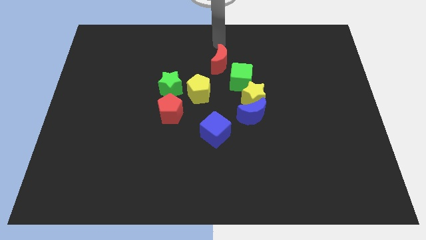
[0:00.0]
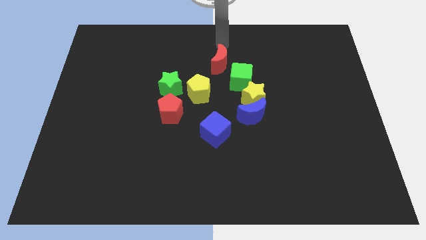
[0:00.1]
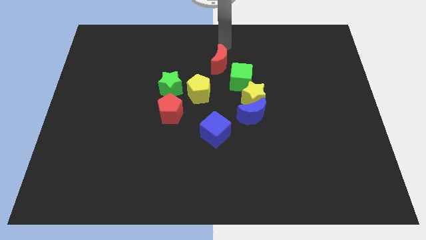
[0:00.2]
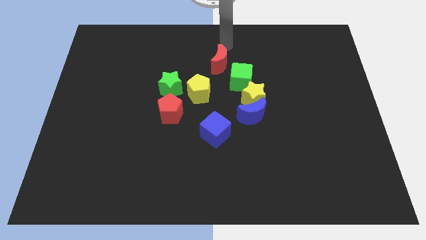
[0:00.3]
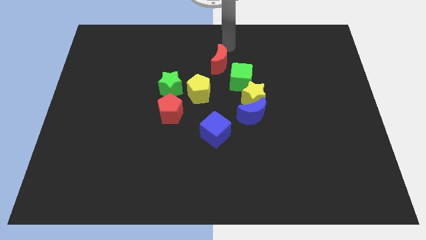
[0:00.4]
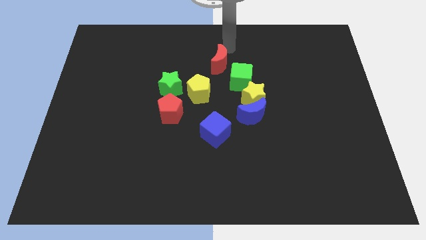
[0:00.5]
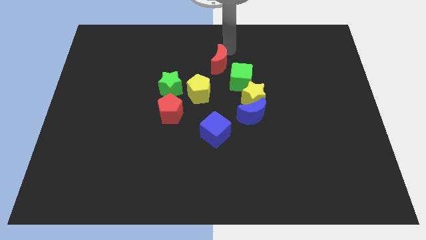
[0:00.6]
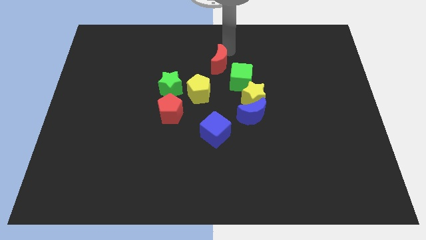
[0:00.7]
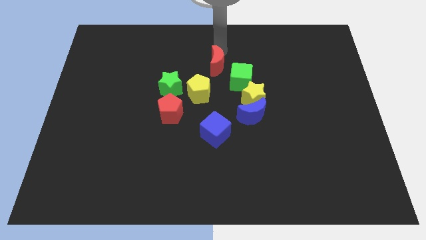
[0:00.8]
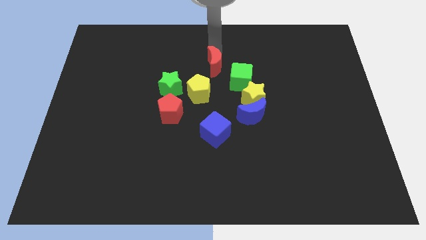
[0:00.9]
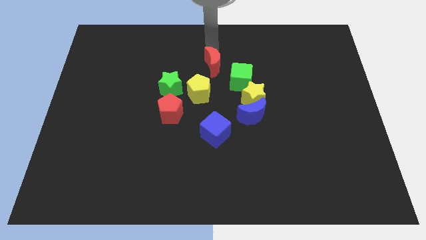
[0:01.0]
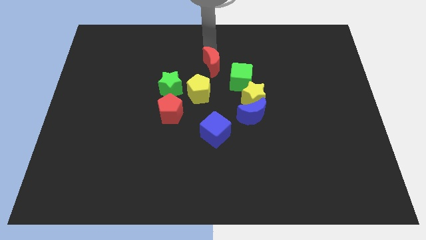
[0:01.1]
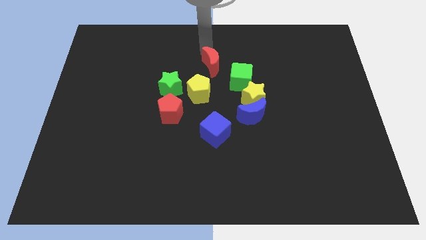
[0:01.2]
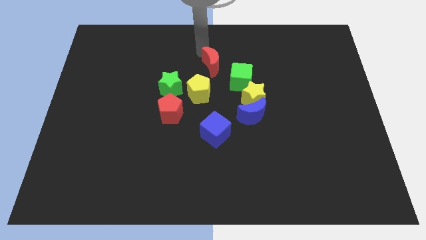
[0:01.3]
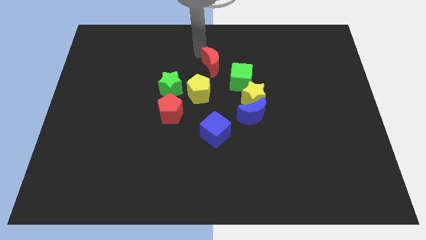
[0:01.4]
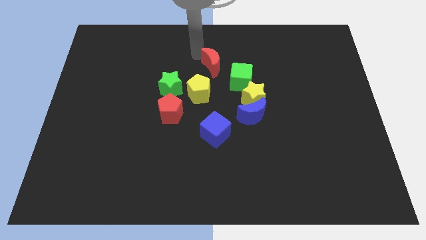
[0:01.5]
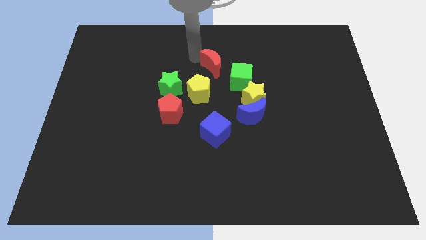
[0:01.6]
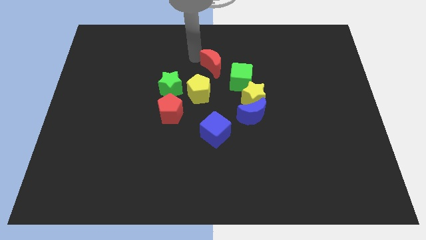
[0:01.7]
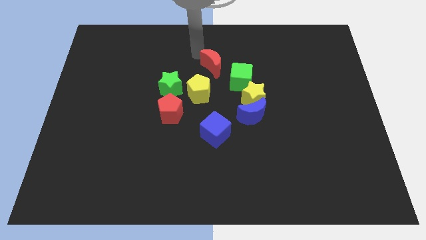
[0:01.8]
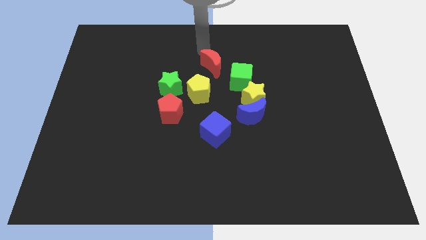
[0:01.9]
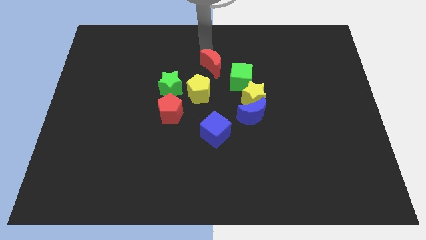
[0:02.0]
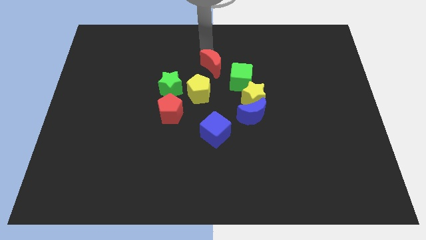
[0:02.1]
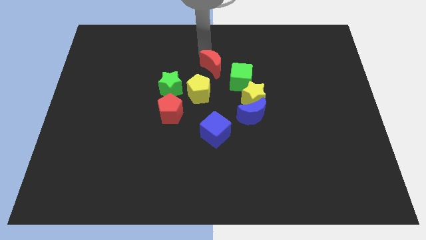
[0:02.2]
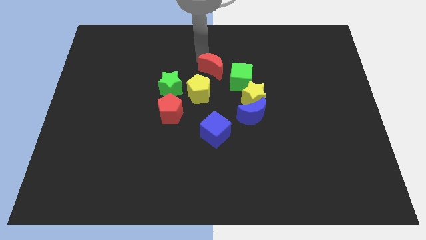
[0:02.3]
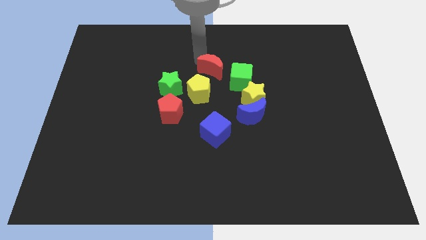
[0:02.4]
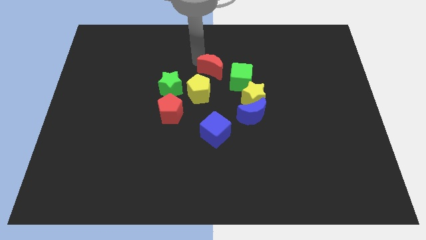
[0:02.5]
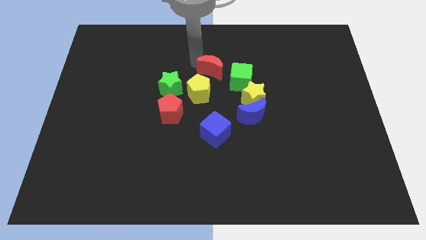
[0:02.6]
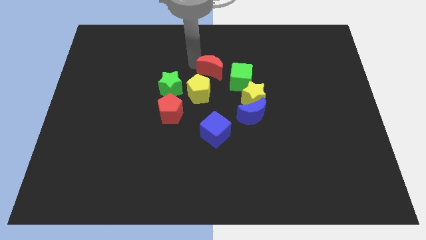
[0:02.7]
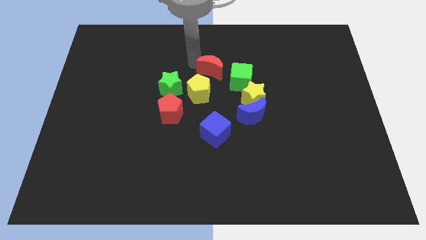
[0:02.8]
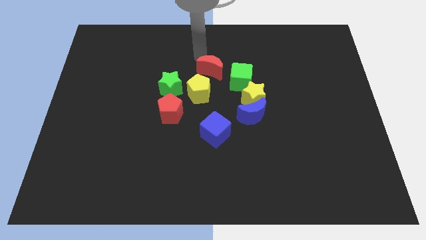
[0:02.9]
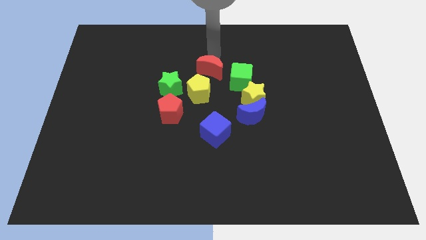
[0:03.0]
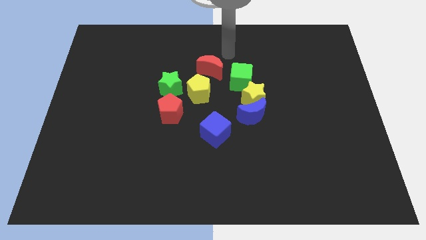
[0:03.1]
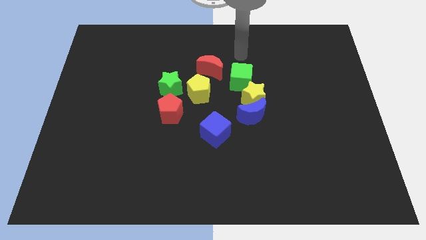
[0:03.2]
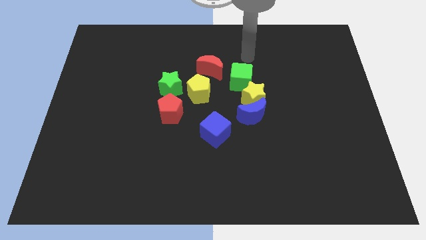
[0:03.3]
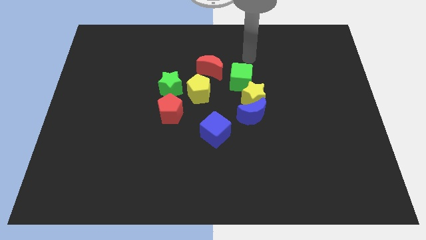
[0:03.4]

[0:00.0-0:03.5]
place the red crescent above right top of the yellow pentagon

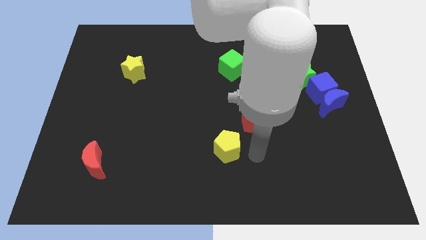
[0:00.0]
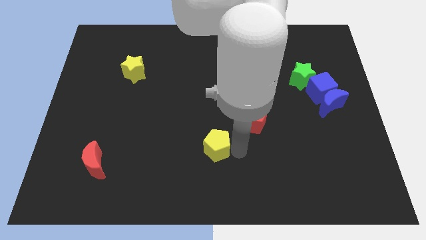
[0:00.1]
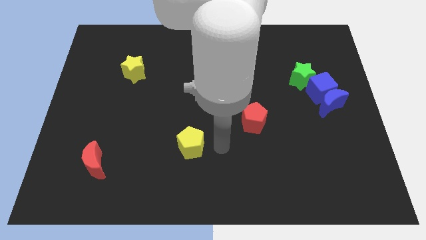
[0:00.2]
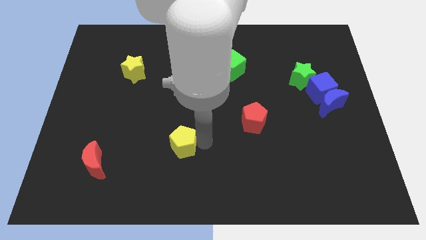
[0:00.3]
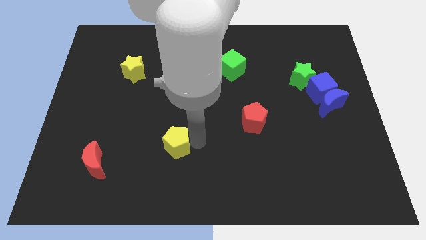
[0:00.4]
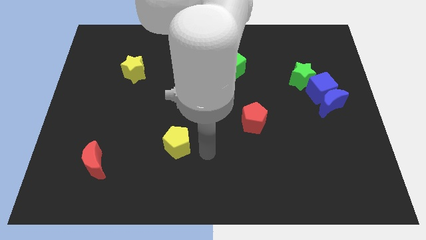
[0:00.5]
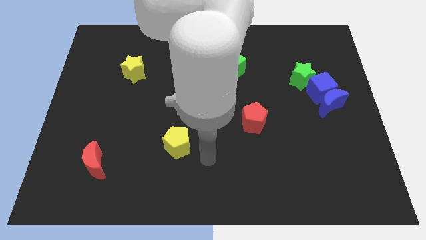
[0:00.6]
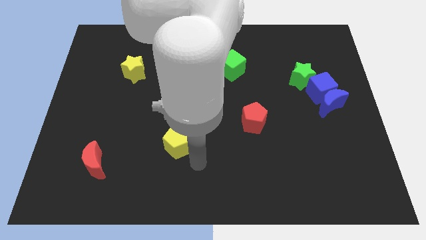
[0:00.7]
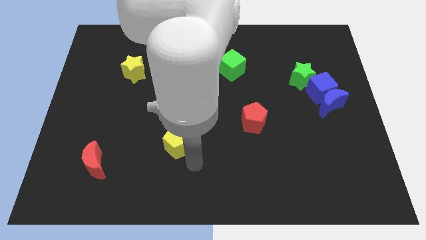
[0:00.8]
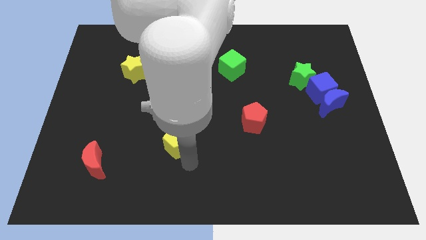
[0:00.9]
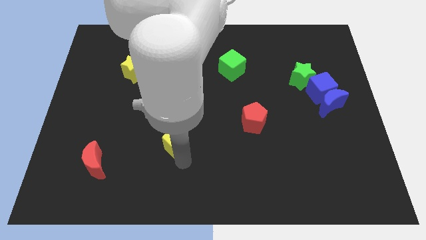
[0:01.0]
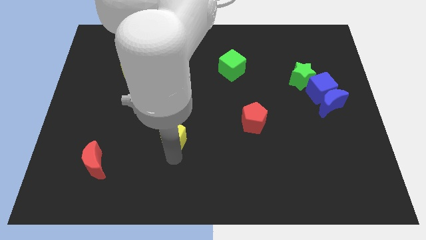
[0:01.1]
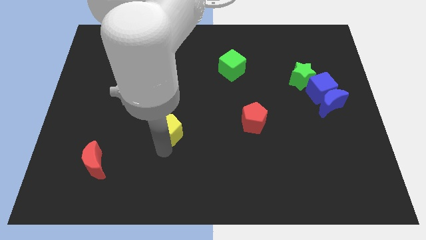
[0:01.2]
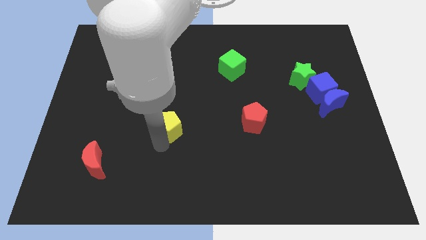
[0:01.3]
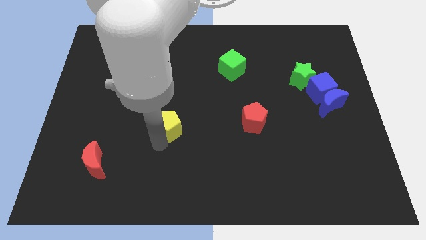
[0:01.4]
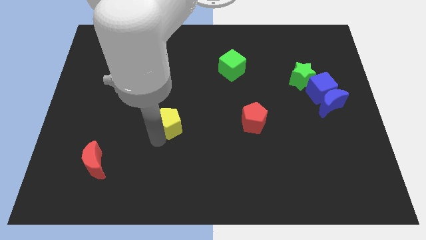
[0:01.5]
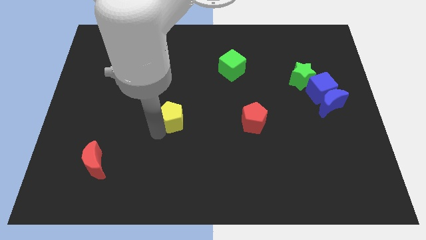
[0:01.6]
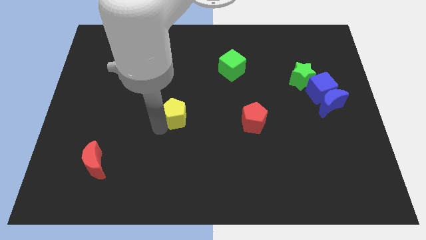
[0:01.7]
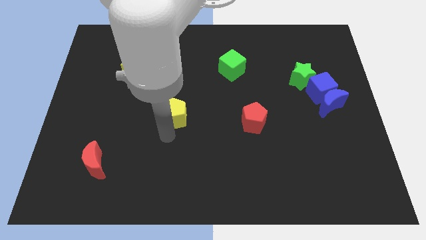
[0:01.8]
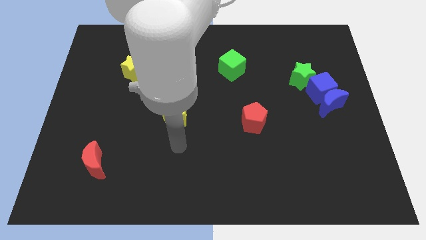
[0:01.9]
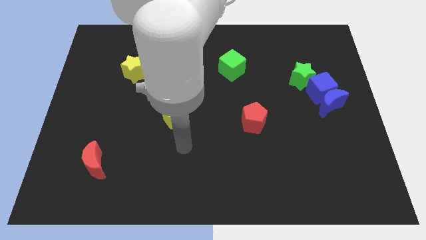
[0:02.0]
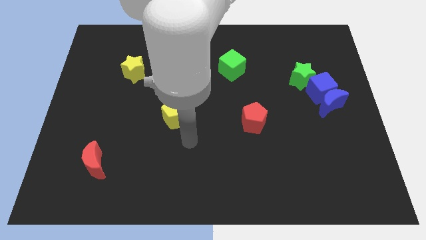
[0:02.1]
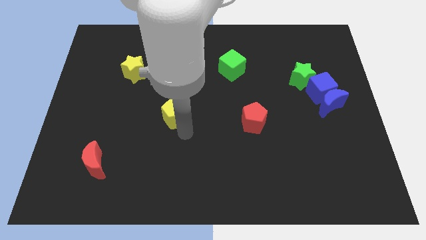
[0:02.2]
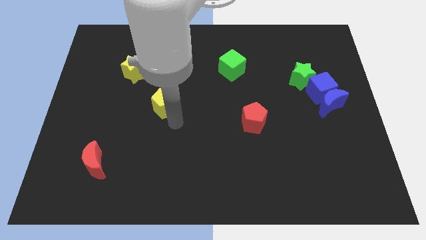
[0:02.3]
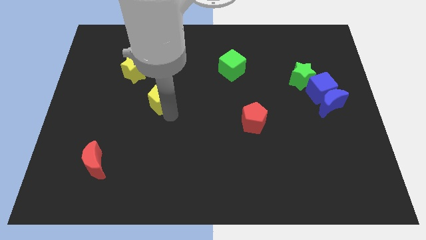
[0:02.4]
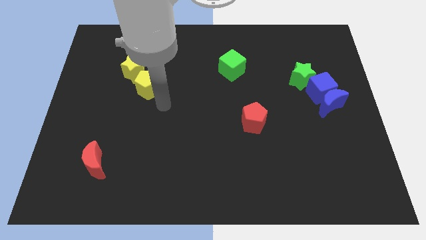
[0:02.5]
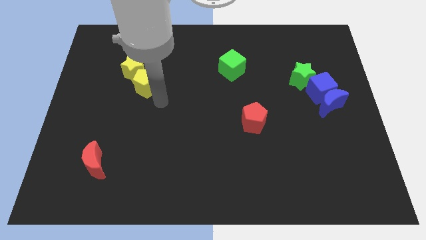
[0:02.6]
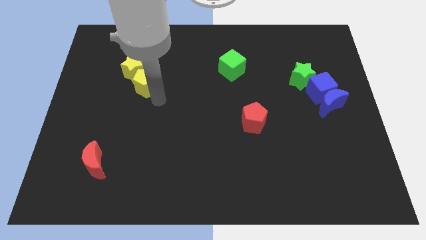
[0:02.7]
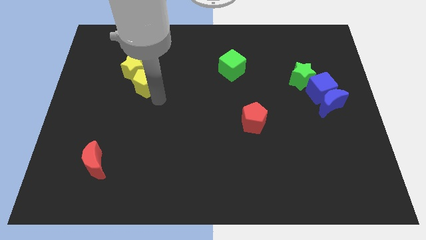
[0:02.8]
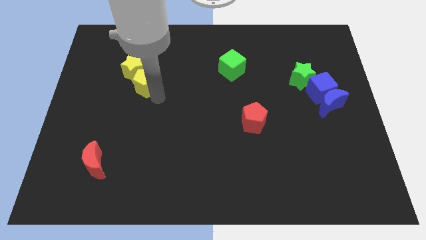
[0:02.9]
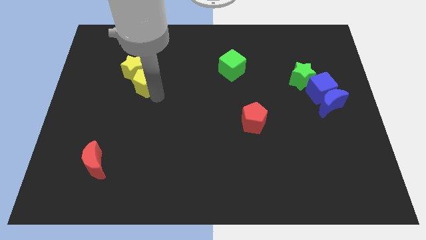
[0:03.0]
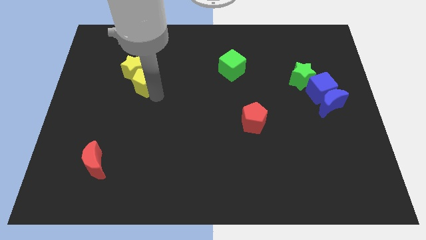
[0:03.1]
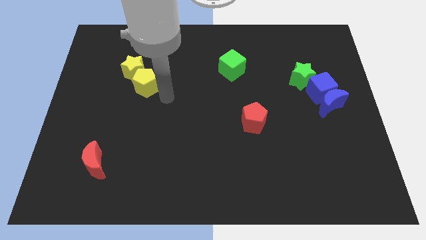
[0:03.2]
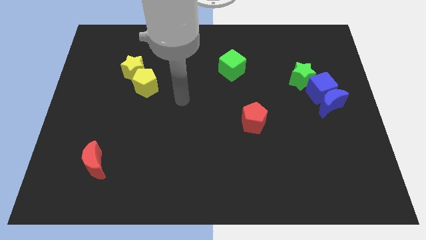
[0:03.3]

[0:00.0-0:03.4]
place the yellow pentagon horizontally to the left side of the green cube

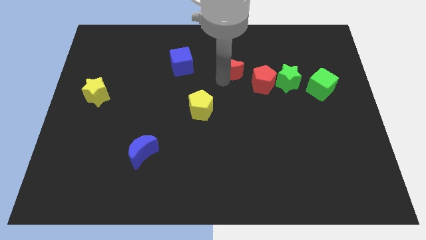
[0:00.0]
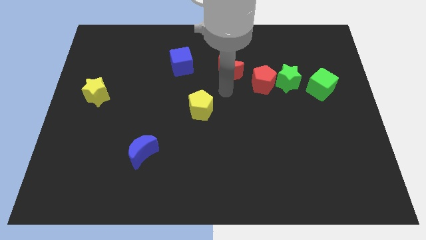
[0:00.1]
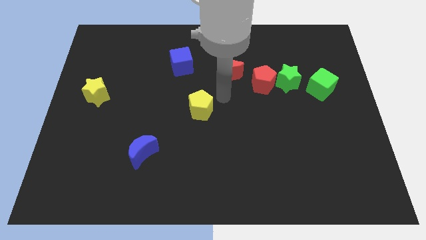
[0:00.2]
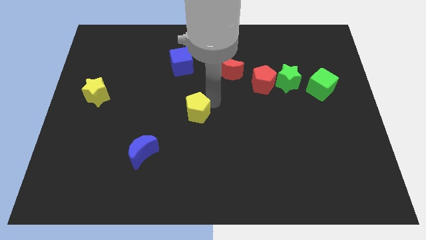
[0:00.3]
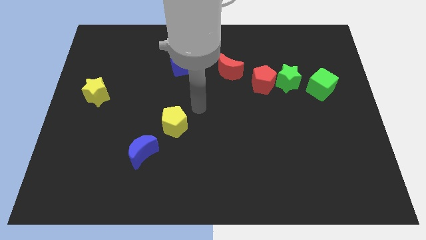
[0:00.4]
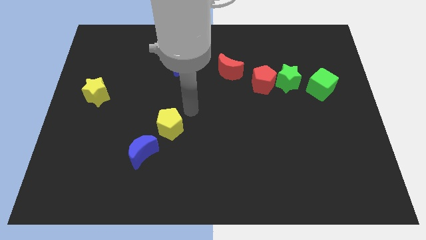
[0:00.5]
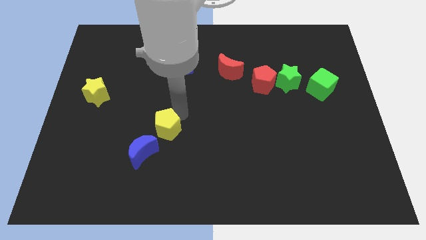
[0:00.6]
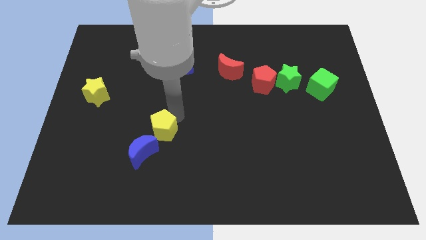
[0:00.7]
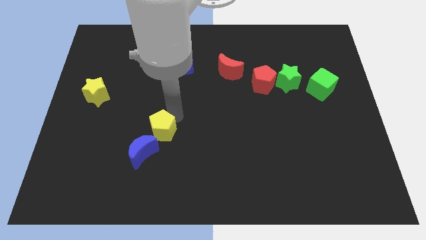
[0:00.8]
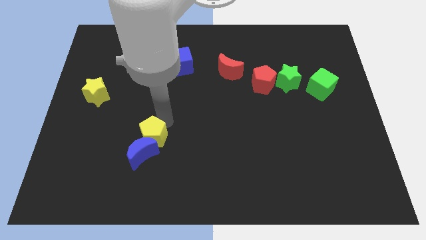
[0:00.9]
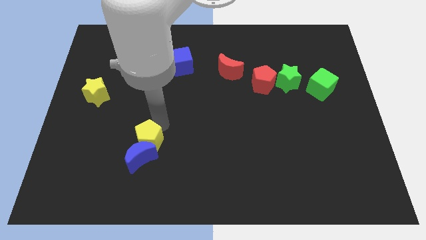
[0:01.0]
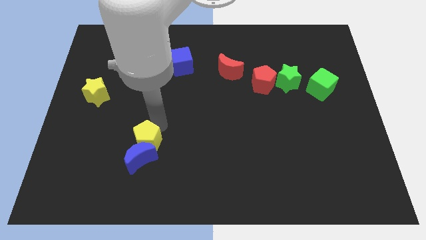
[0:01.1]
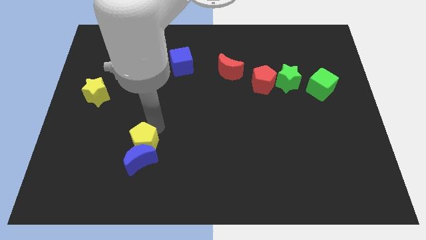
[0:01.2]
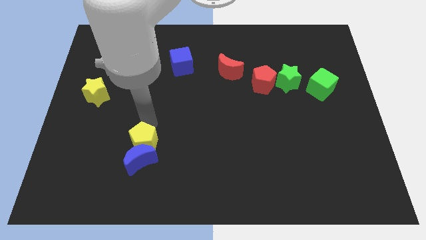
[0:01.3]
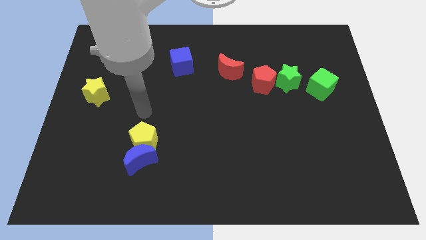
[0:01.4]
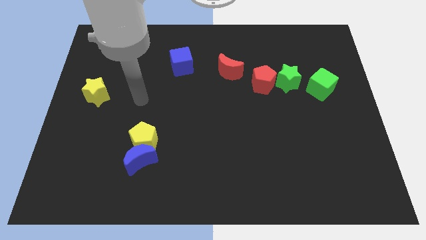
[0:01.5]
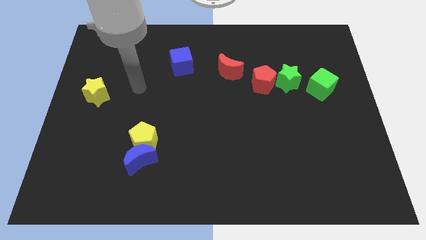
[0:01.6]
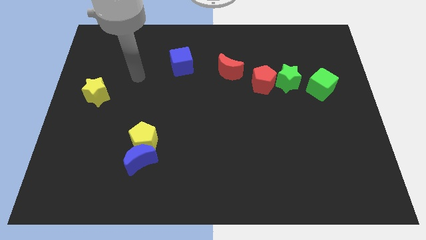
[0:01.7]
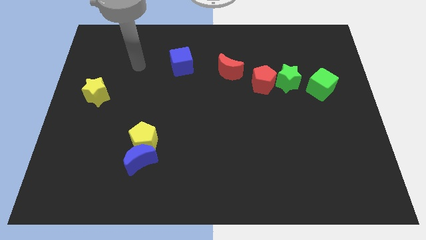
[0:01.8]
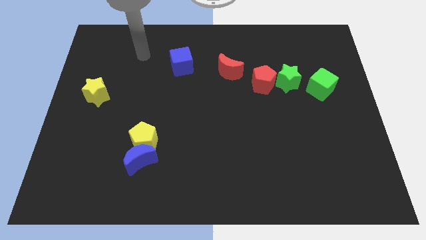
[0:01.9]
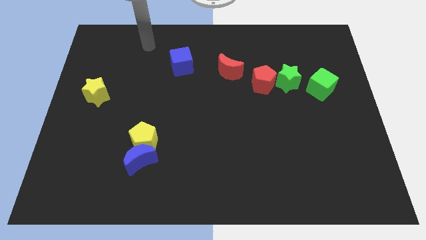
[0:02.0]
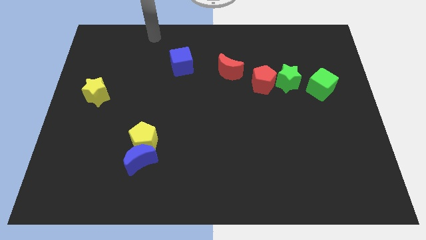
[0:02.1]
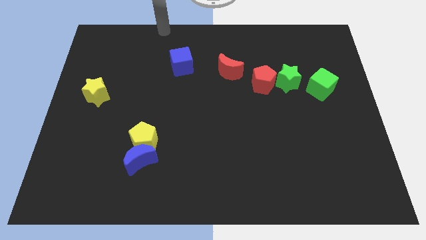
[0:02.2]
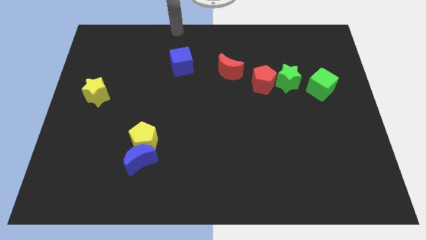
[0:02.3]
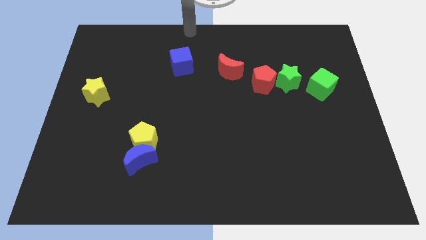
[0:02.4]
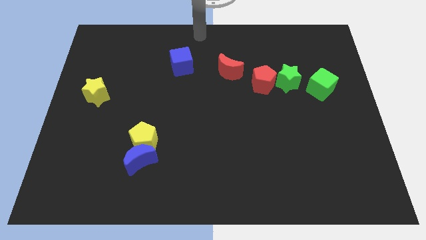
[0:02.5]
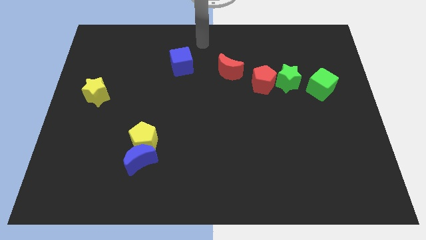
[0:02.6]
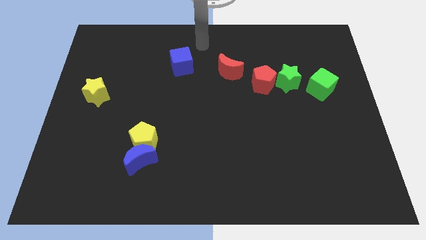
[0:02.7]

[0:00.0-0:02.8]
slide the yellow pentagon into the top side of the blue moon
